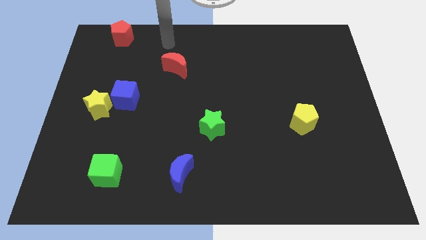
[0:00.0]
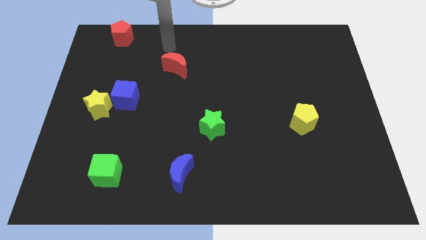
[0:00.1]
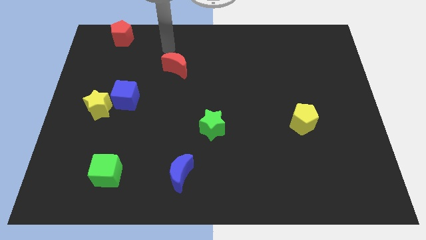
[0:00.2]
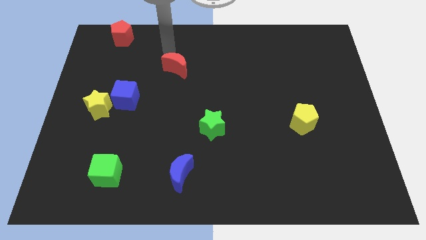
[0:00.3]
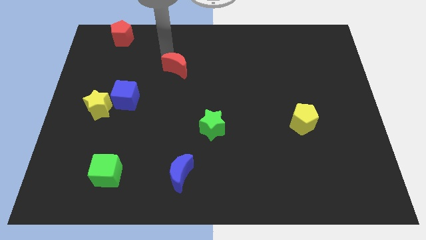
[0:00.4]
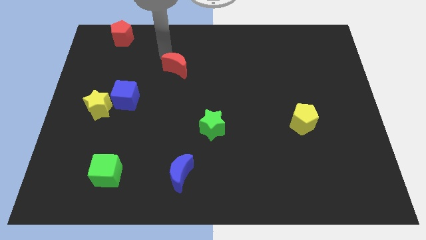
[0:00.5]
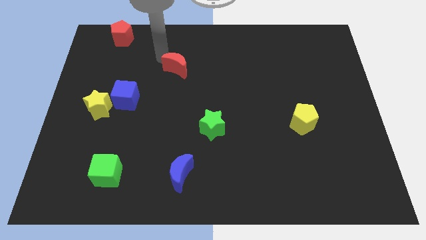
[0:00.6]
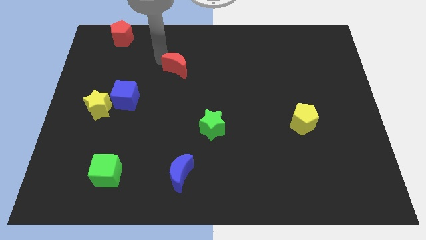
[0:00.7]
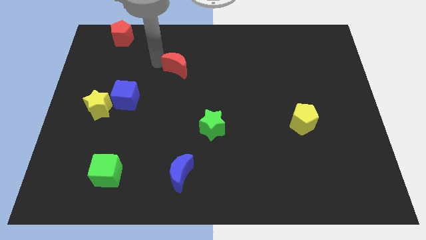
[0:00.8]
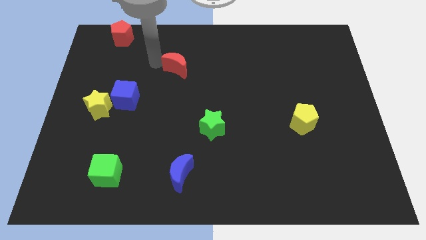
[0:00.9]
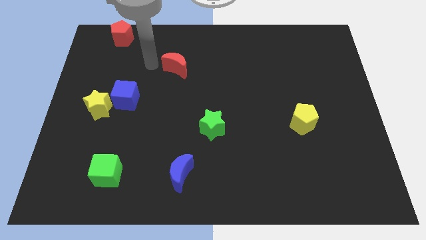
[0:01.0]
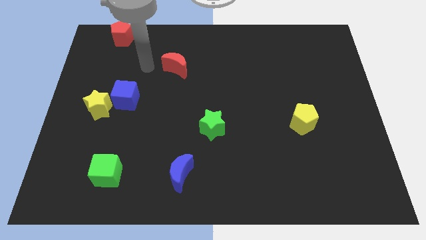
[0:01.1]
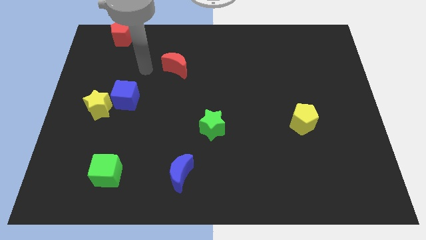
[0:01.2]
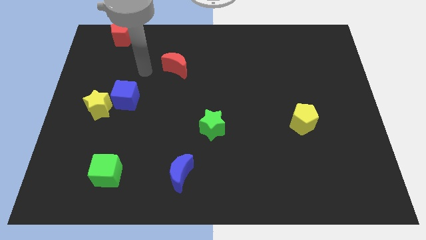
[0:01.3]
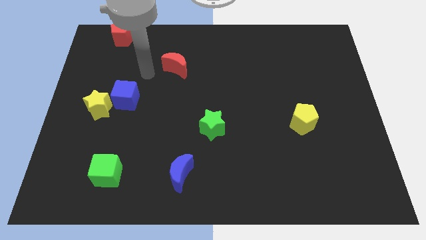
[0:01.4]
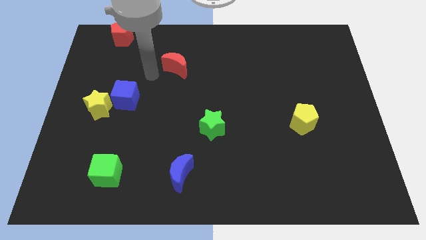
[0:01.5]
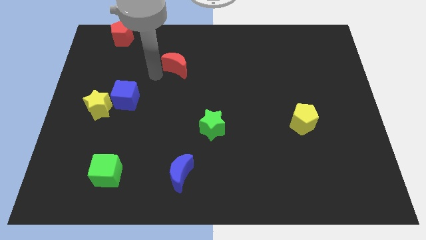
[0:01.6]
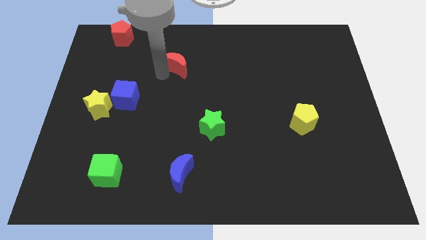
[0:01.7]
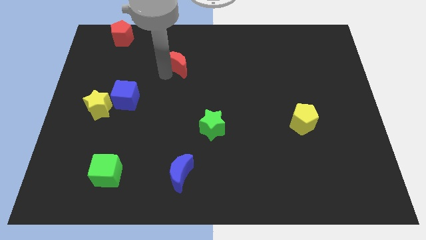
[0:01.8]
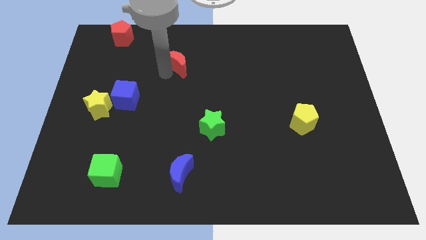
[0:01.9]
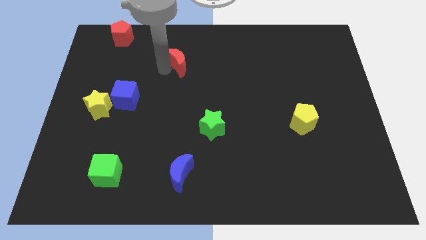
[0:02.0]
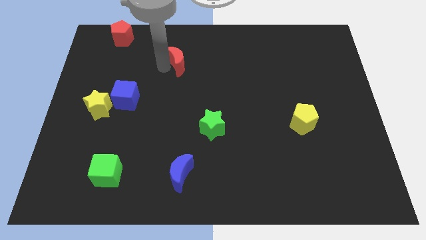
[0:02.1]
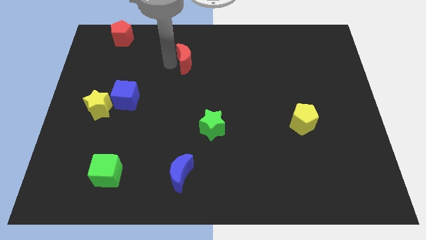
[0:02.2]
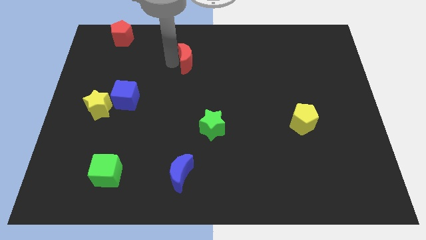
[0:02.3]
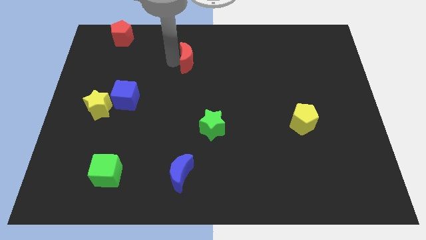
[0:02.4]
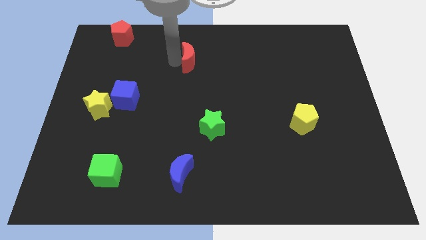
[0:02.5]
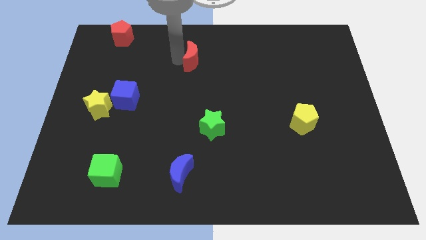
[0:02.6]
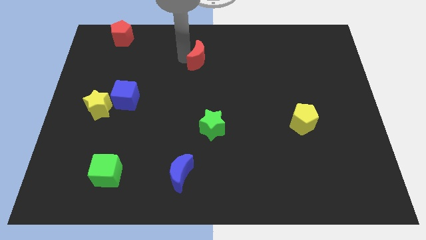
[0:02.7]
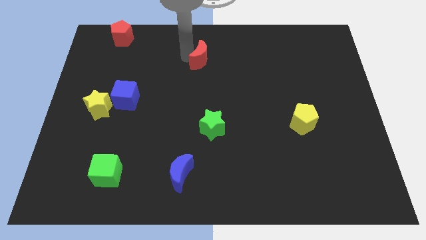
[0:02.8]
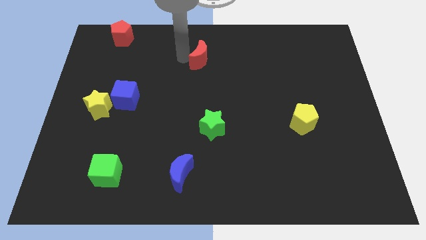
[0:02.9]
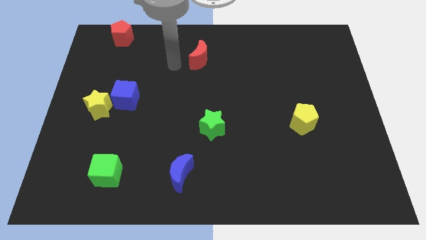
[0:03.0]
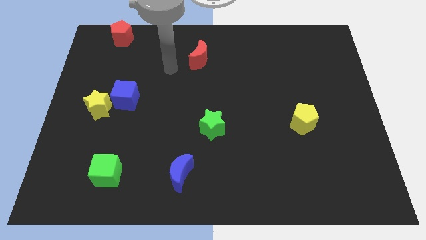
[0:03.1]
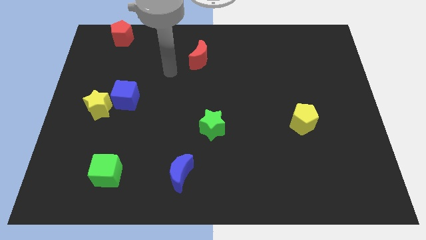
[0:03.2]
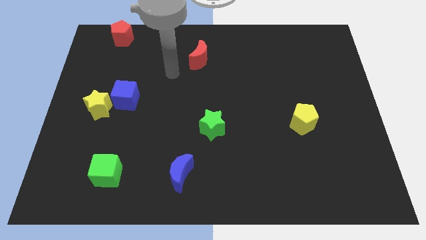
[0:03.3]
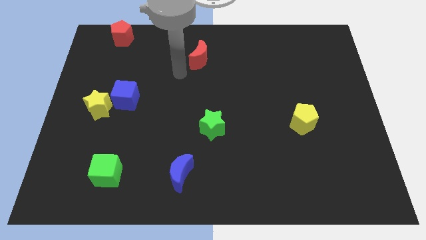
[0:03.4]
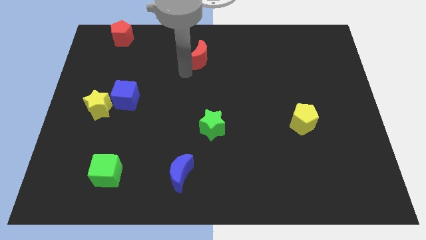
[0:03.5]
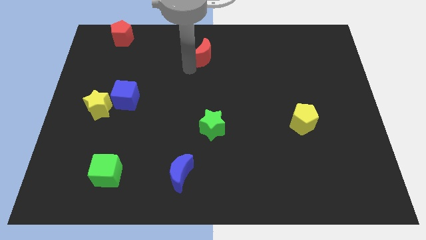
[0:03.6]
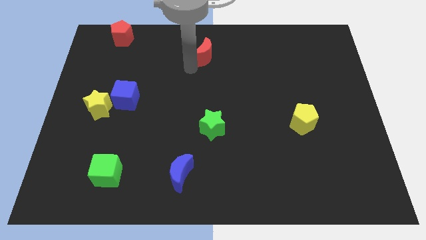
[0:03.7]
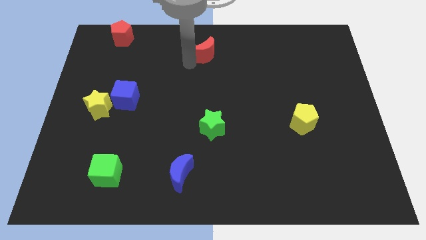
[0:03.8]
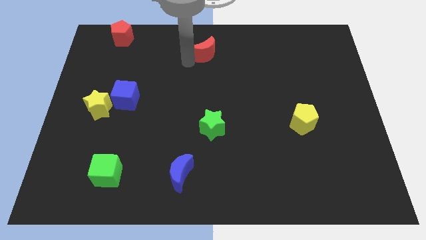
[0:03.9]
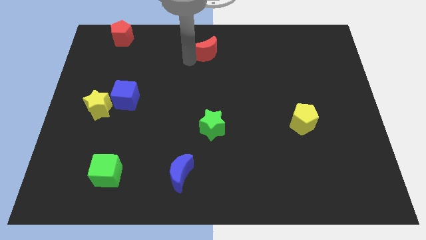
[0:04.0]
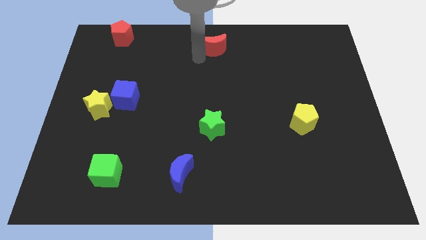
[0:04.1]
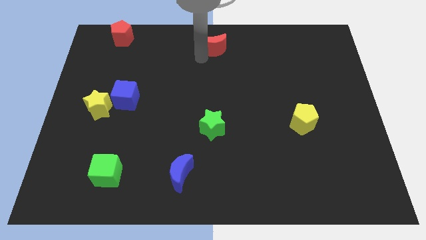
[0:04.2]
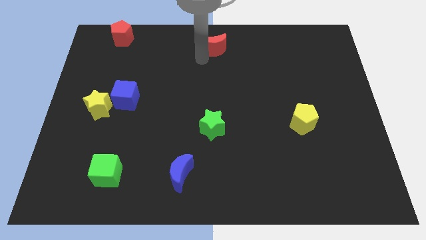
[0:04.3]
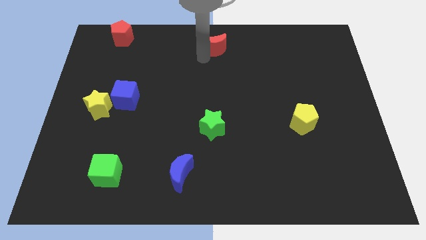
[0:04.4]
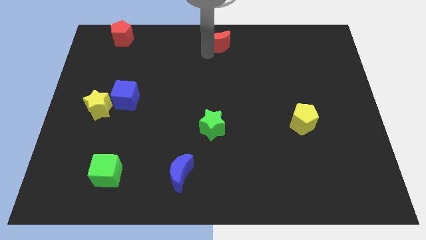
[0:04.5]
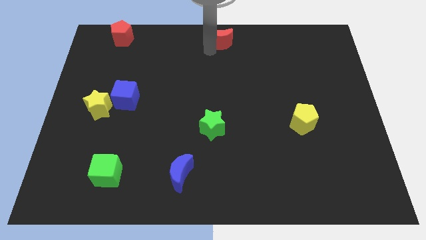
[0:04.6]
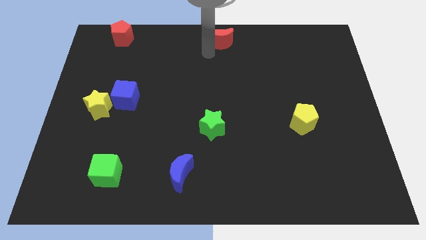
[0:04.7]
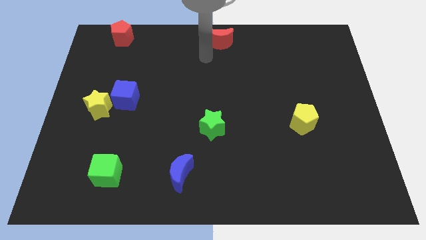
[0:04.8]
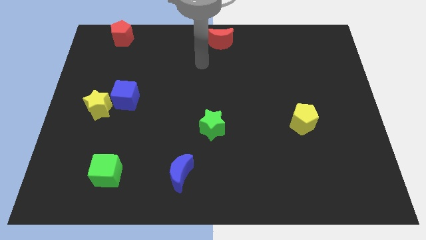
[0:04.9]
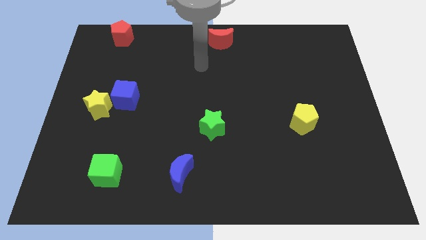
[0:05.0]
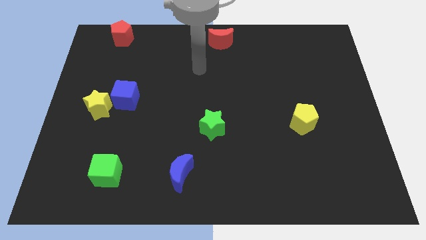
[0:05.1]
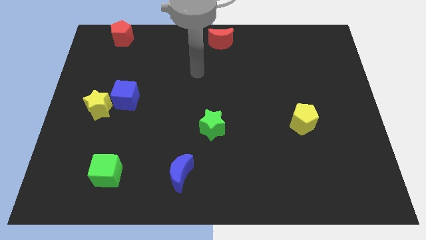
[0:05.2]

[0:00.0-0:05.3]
place the red crescent at the top center of the board

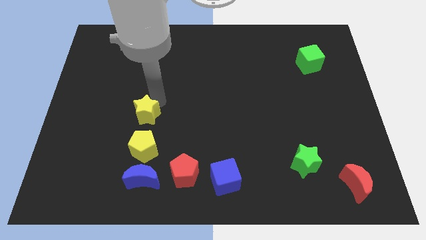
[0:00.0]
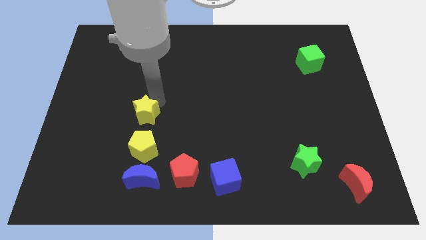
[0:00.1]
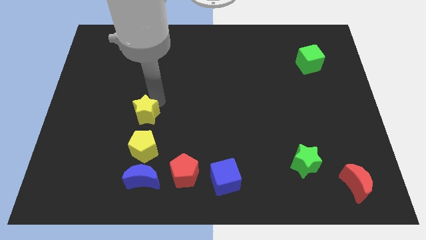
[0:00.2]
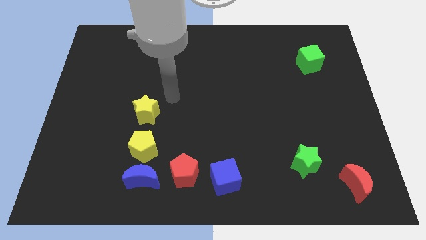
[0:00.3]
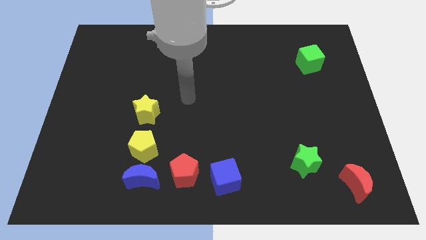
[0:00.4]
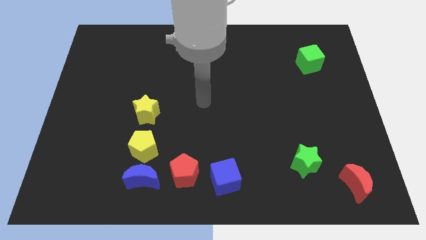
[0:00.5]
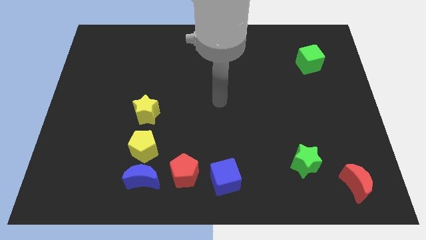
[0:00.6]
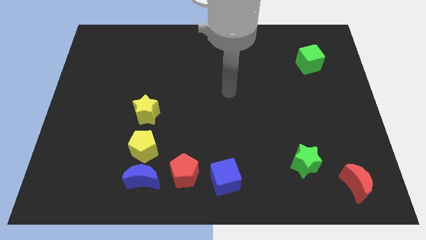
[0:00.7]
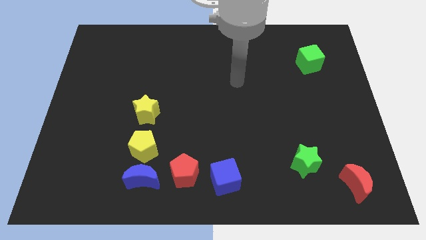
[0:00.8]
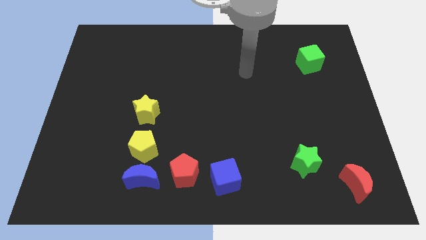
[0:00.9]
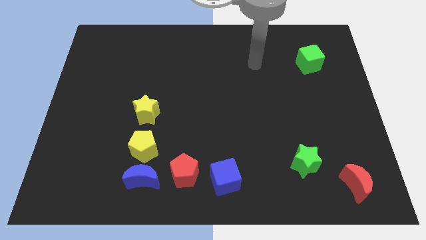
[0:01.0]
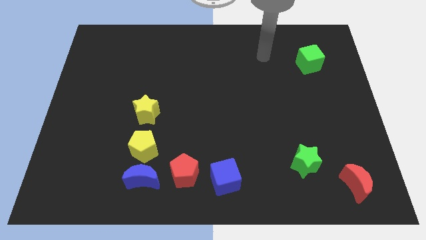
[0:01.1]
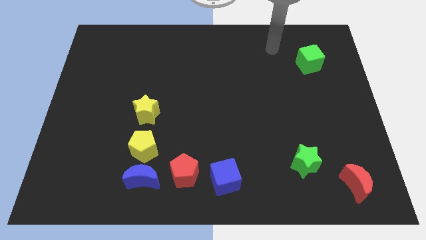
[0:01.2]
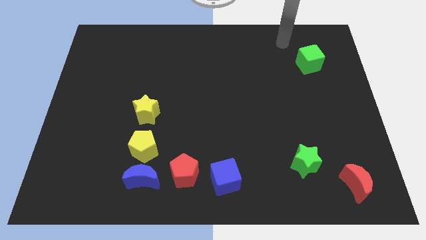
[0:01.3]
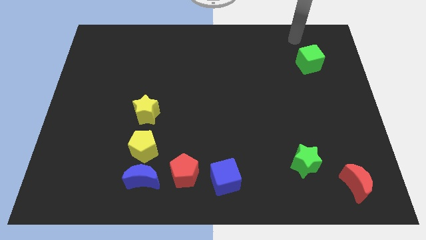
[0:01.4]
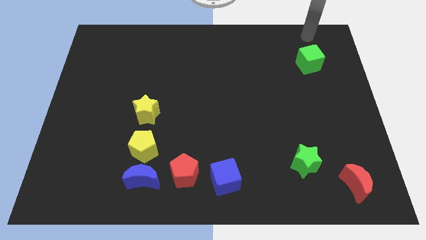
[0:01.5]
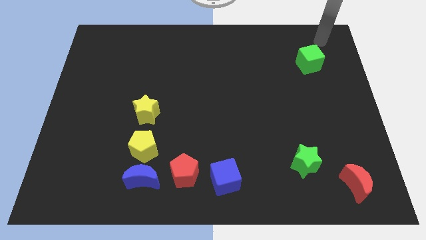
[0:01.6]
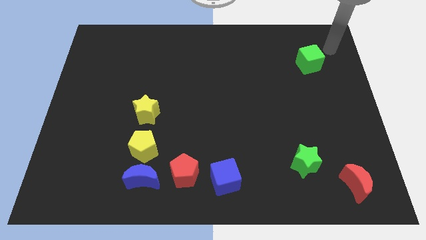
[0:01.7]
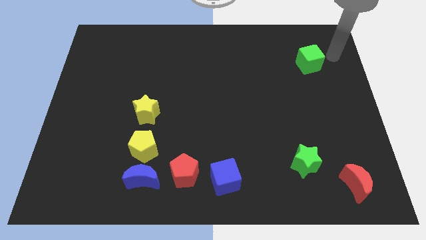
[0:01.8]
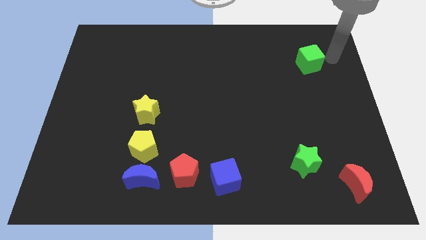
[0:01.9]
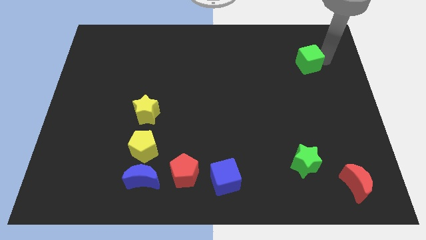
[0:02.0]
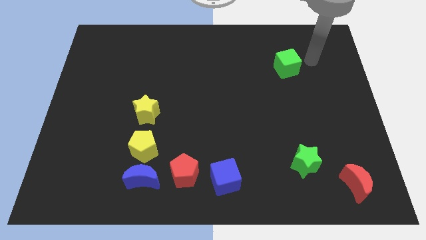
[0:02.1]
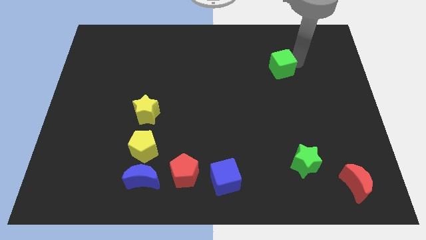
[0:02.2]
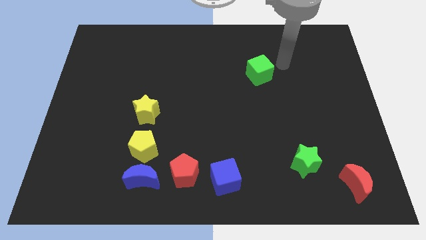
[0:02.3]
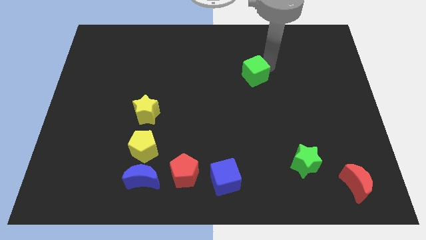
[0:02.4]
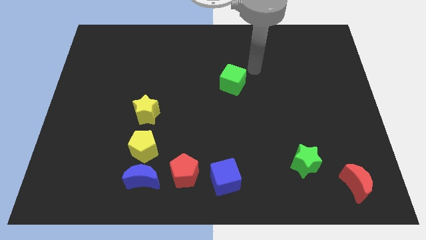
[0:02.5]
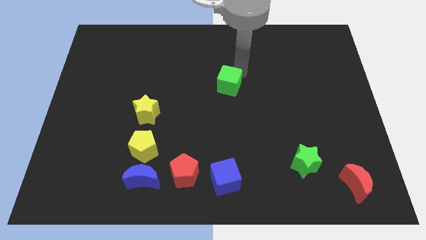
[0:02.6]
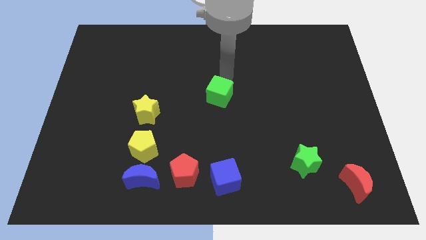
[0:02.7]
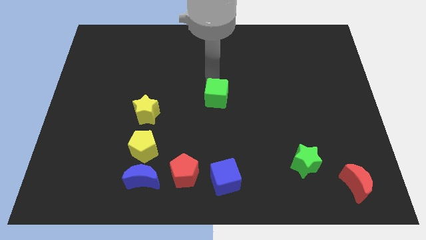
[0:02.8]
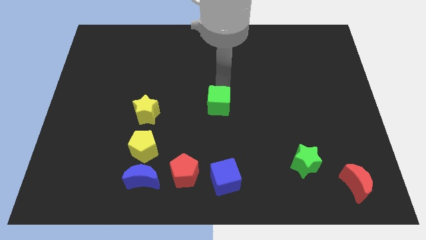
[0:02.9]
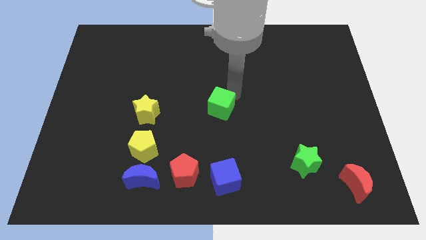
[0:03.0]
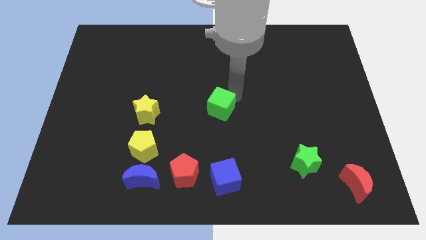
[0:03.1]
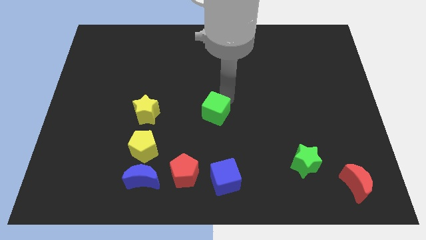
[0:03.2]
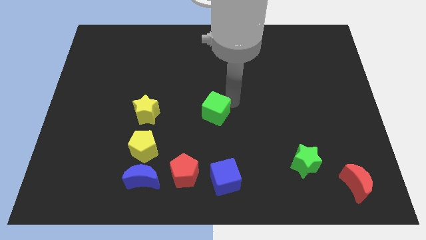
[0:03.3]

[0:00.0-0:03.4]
slide the green cube diagonally top left to the green star

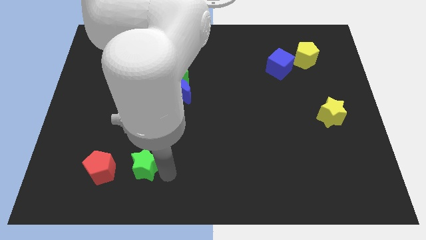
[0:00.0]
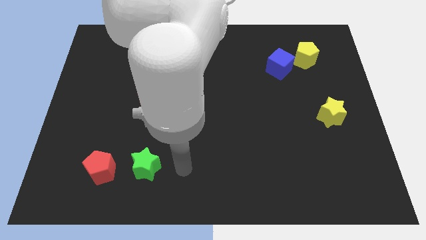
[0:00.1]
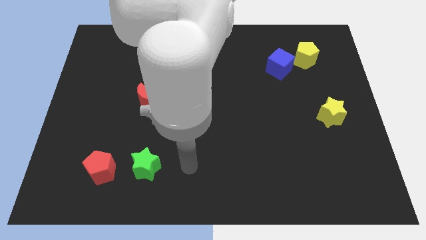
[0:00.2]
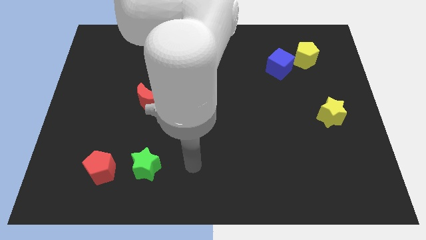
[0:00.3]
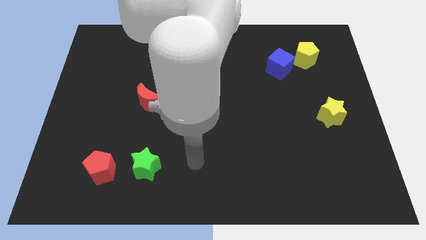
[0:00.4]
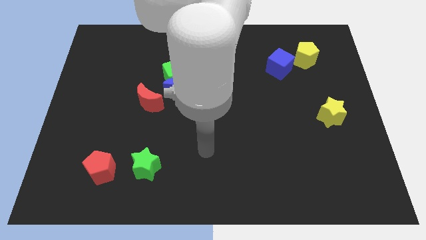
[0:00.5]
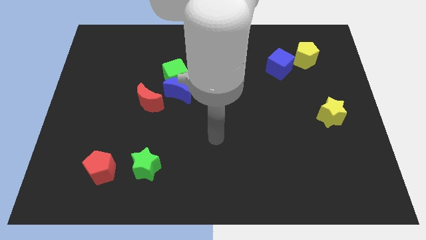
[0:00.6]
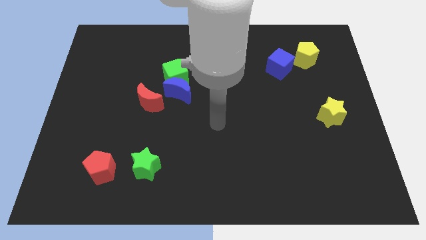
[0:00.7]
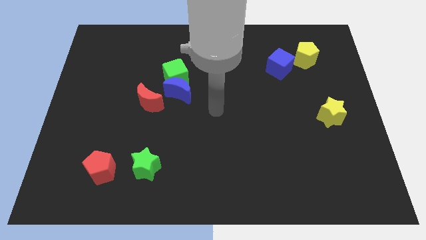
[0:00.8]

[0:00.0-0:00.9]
place your hand at center of the board
